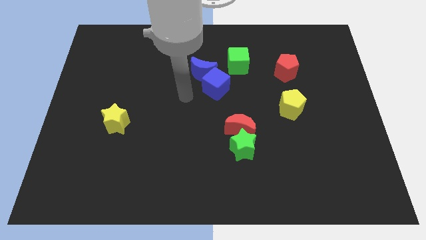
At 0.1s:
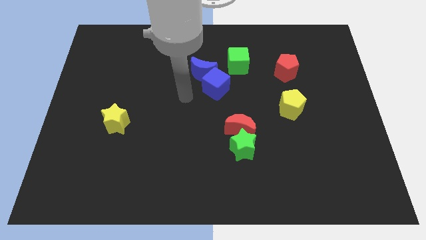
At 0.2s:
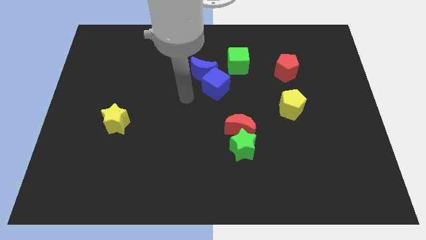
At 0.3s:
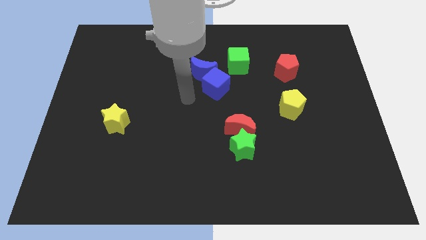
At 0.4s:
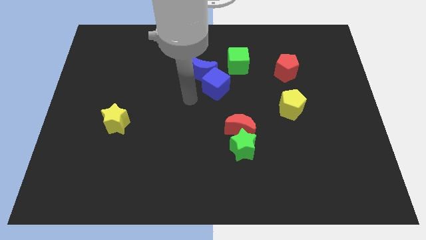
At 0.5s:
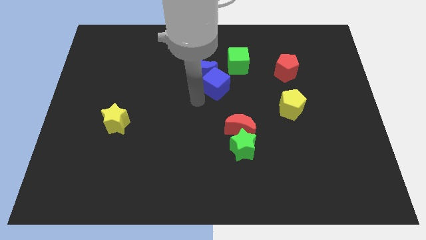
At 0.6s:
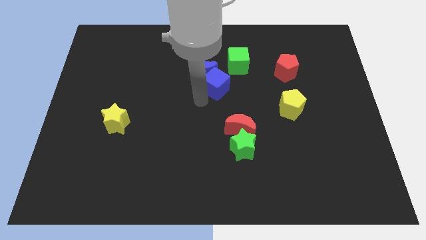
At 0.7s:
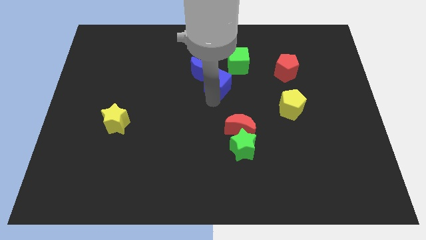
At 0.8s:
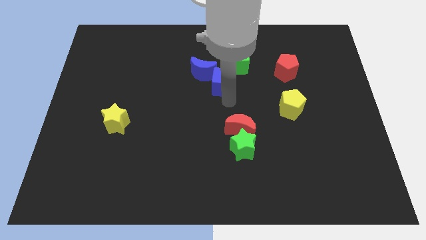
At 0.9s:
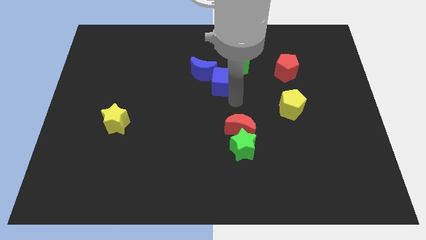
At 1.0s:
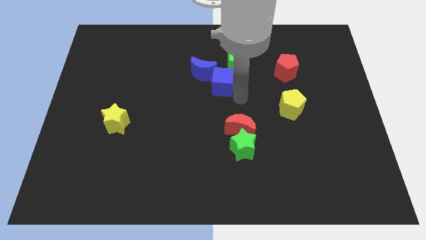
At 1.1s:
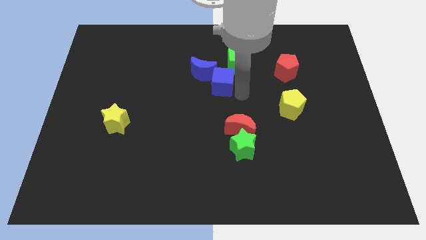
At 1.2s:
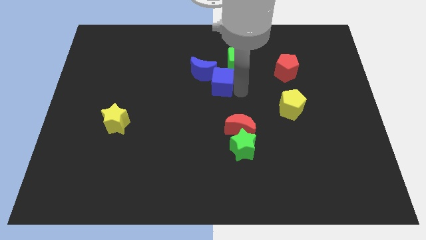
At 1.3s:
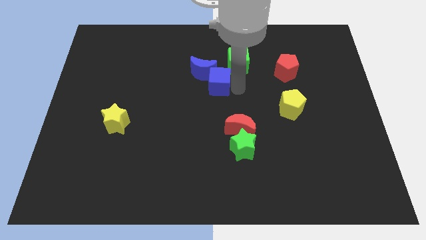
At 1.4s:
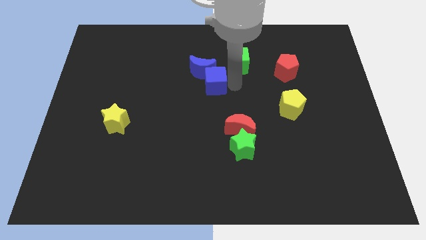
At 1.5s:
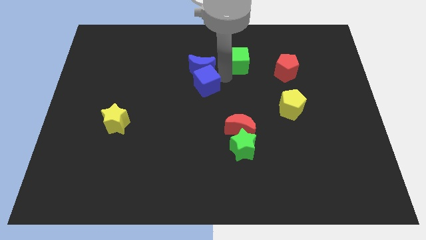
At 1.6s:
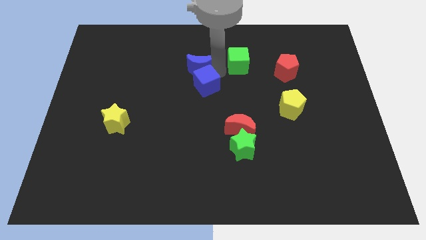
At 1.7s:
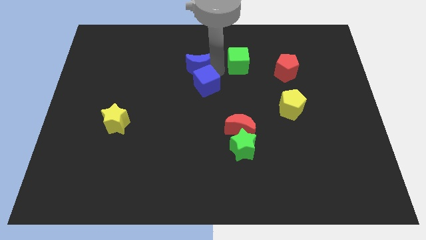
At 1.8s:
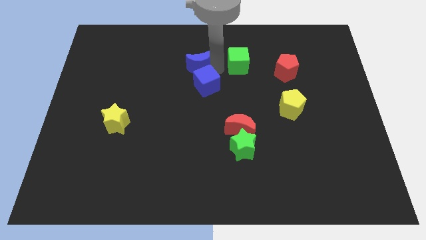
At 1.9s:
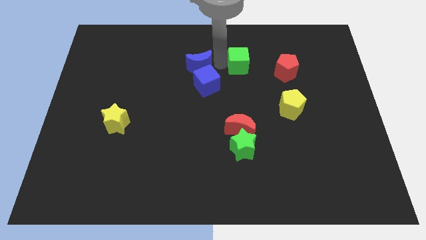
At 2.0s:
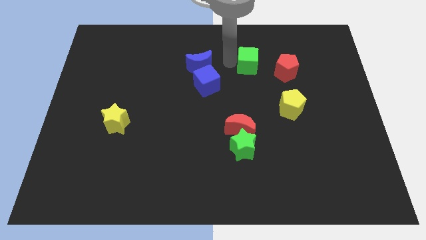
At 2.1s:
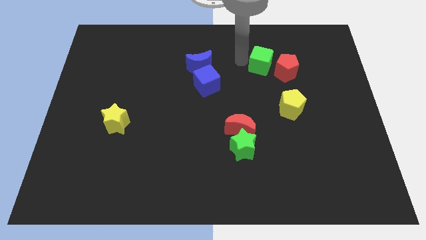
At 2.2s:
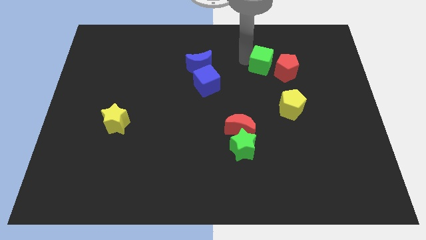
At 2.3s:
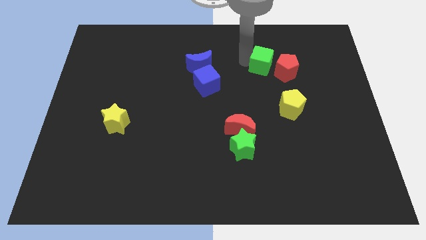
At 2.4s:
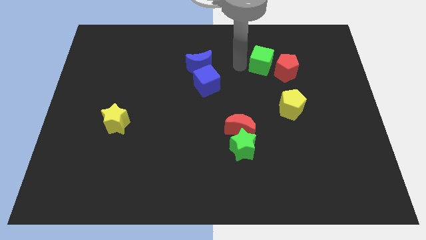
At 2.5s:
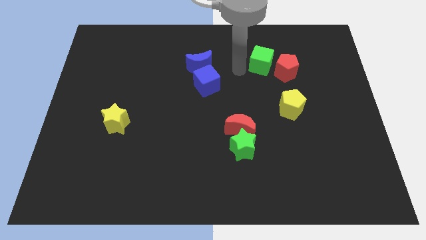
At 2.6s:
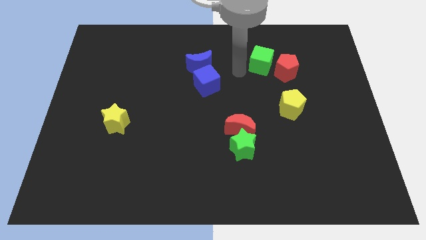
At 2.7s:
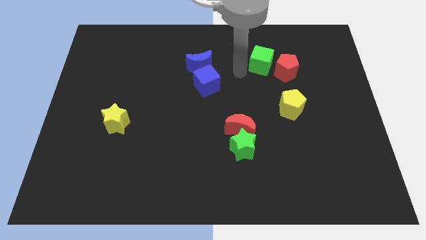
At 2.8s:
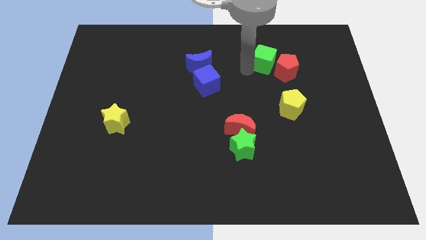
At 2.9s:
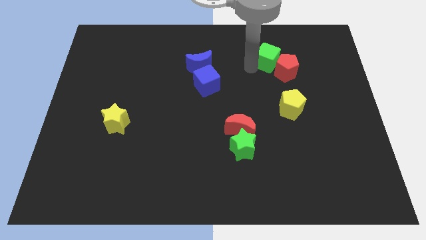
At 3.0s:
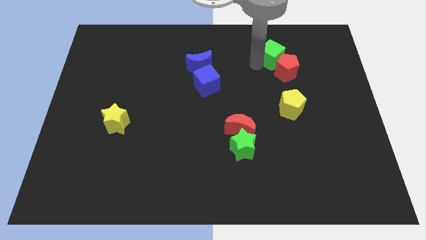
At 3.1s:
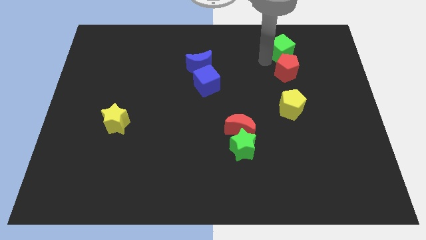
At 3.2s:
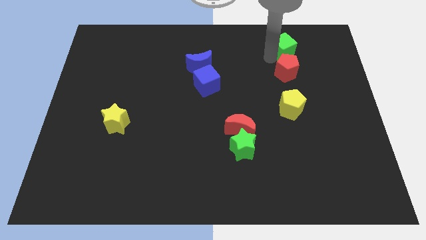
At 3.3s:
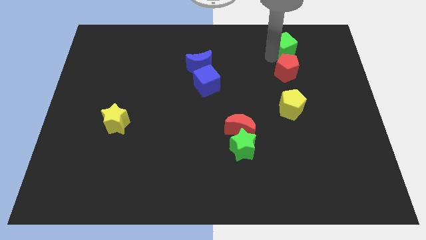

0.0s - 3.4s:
put the green cube vertically above the red pentagon

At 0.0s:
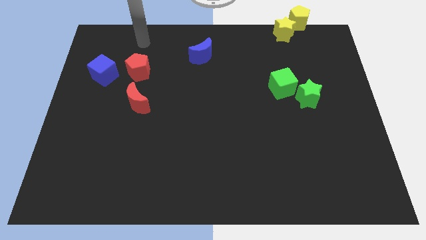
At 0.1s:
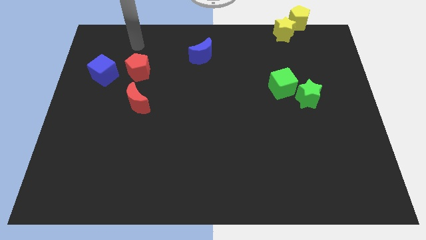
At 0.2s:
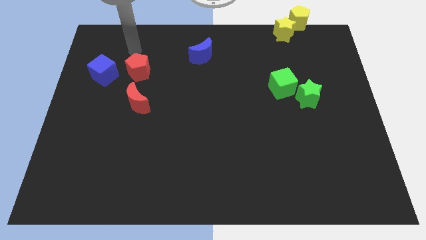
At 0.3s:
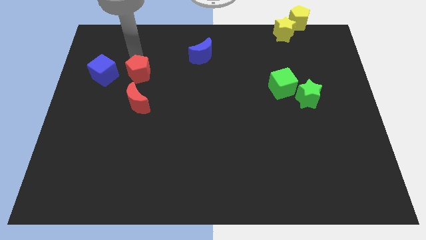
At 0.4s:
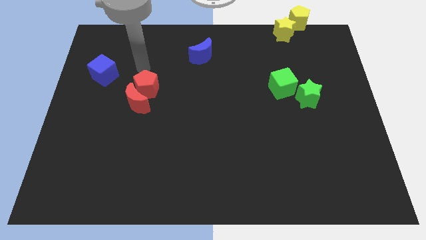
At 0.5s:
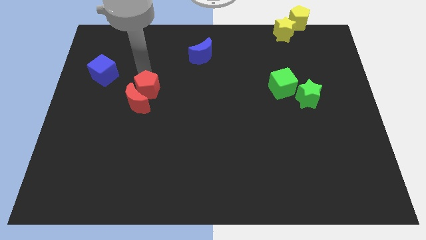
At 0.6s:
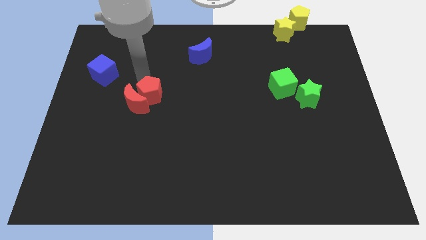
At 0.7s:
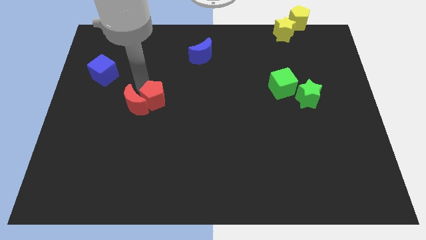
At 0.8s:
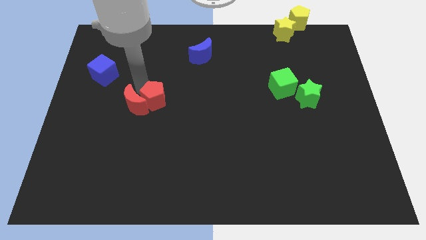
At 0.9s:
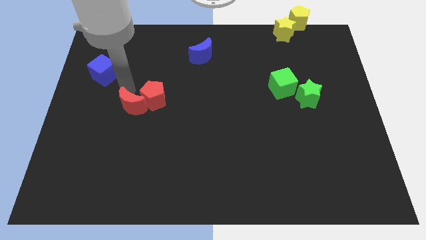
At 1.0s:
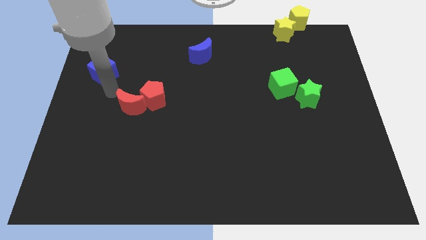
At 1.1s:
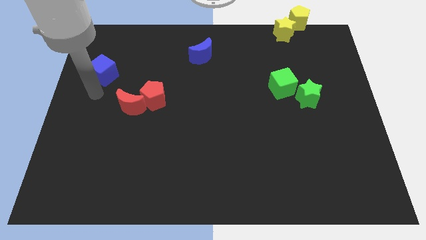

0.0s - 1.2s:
move the red penatgon into the red crescent

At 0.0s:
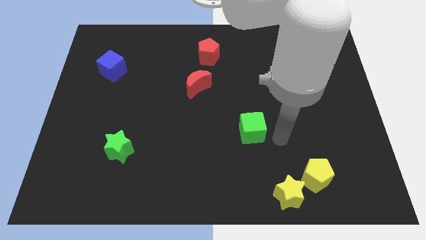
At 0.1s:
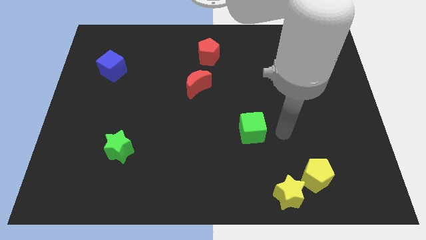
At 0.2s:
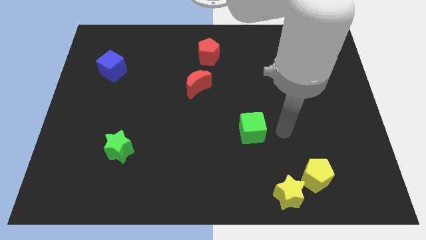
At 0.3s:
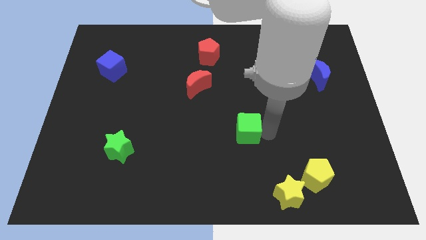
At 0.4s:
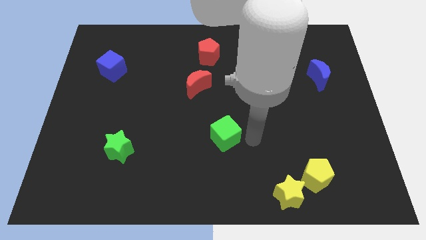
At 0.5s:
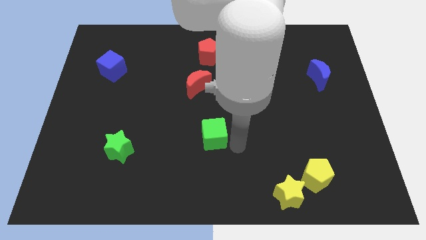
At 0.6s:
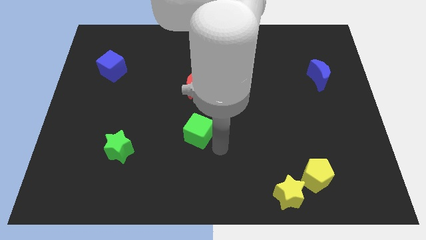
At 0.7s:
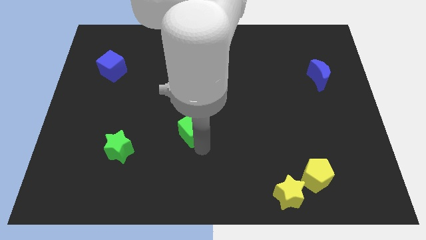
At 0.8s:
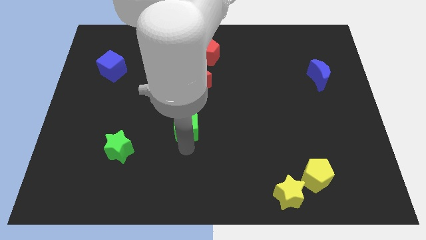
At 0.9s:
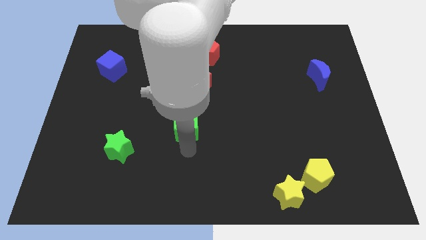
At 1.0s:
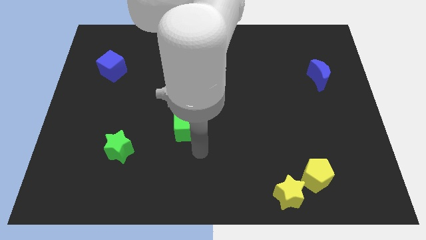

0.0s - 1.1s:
place green cube below red moon

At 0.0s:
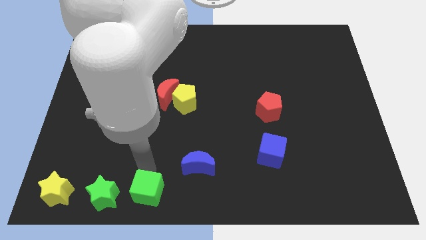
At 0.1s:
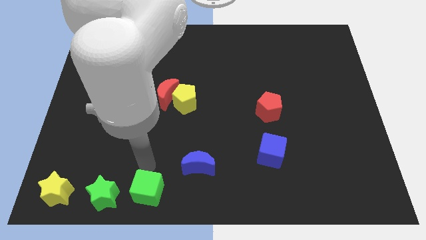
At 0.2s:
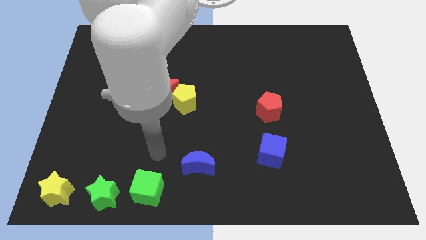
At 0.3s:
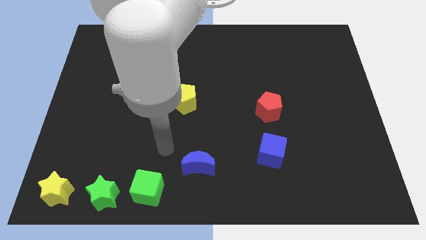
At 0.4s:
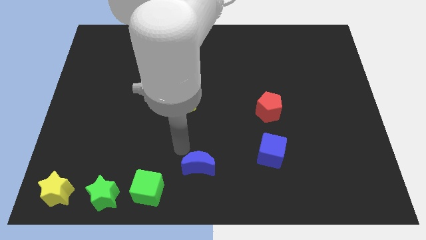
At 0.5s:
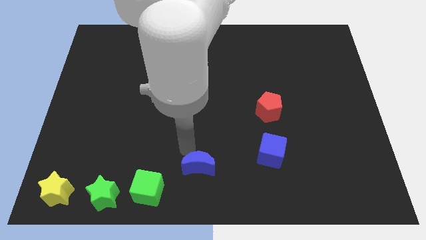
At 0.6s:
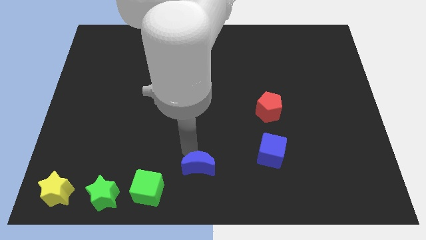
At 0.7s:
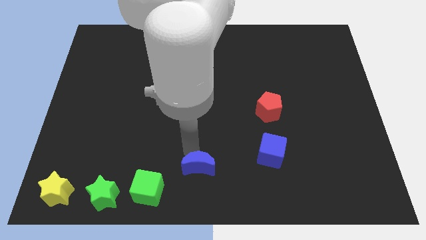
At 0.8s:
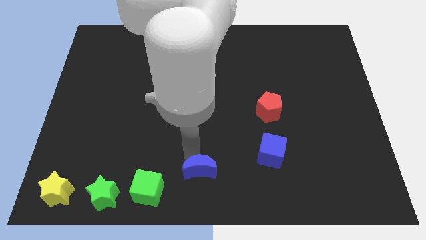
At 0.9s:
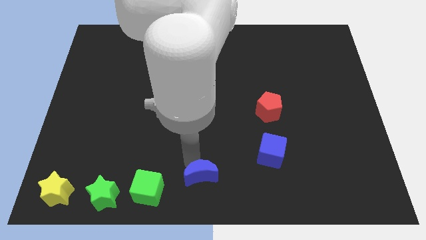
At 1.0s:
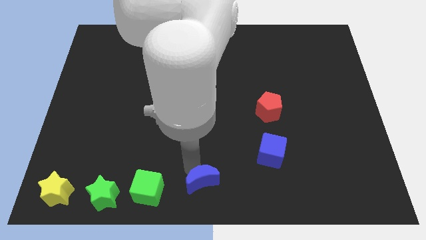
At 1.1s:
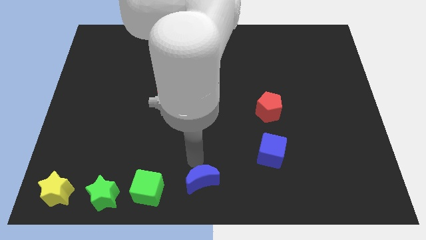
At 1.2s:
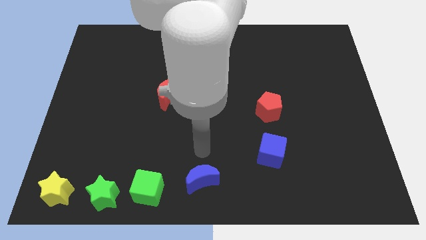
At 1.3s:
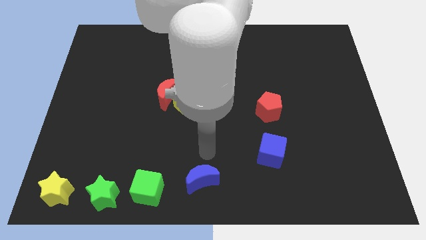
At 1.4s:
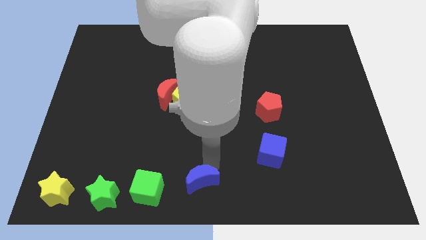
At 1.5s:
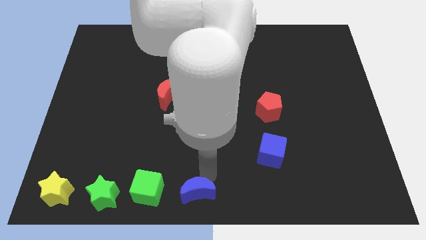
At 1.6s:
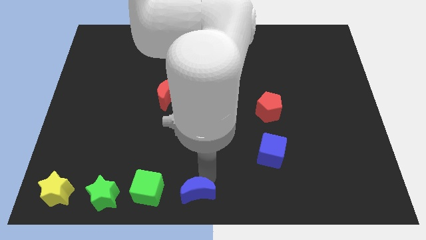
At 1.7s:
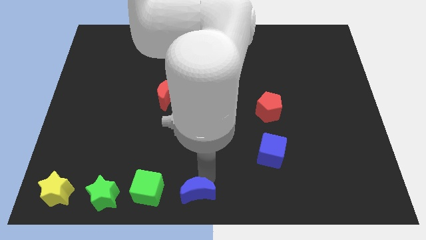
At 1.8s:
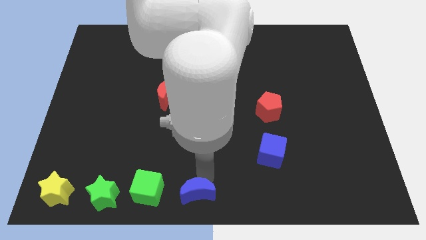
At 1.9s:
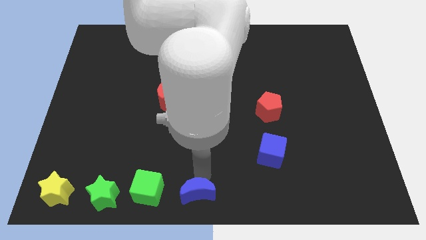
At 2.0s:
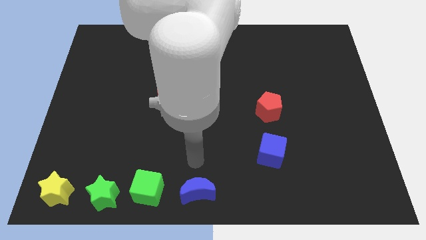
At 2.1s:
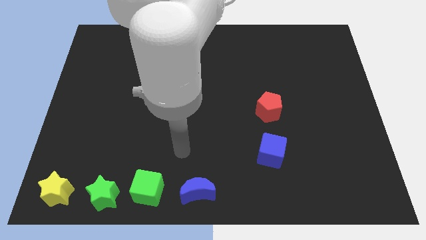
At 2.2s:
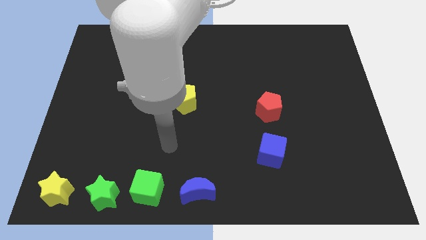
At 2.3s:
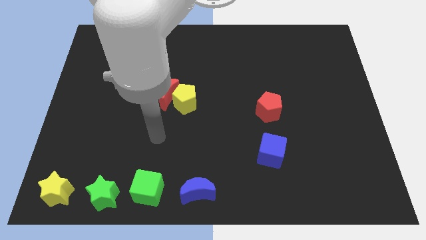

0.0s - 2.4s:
place the blue cube to the bottom center of the board

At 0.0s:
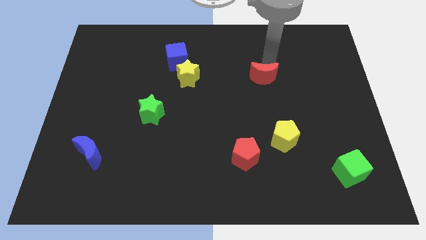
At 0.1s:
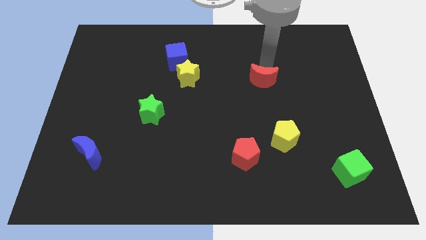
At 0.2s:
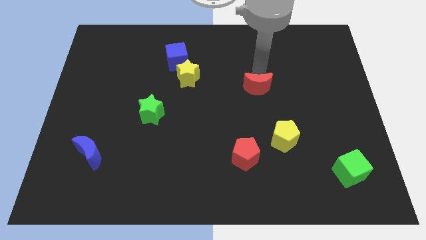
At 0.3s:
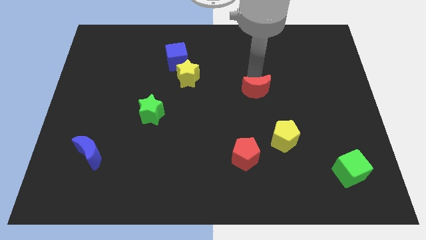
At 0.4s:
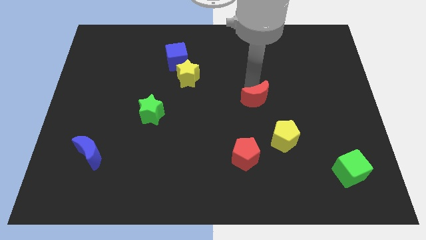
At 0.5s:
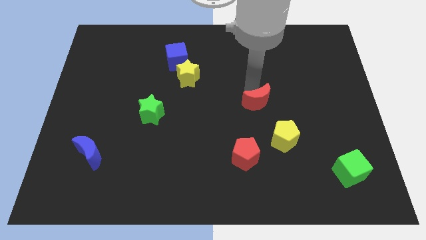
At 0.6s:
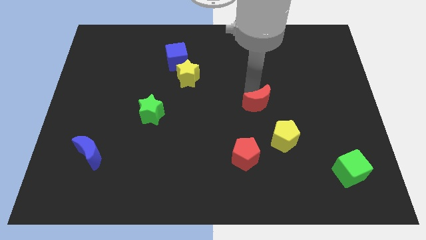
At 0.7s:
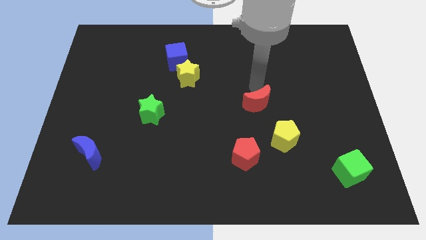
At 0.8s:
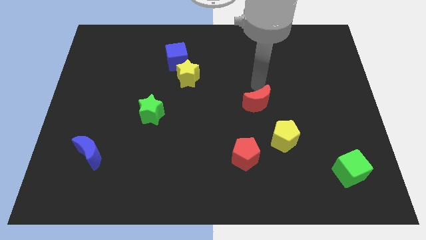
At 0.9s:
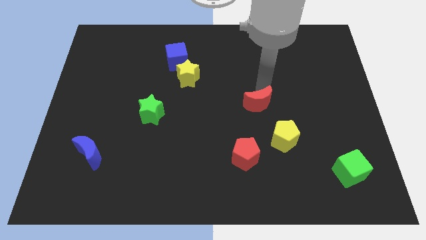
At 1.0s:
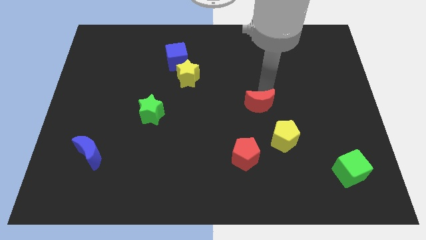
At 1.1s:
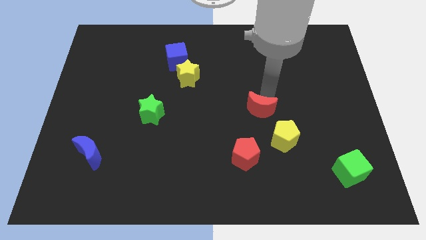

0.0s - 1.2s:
move the red crescent towards the yellow pentagon
